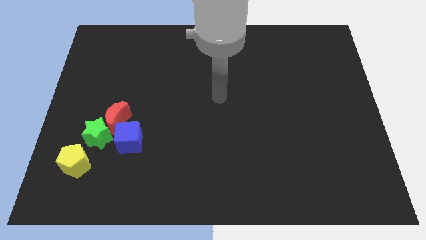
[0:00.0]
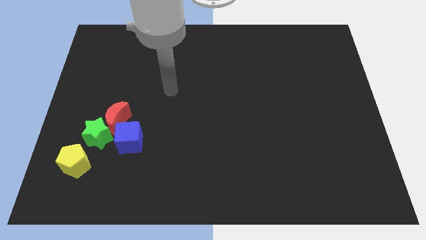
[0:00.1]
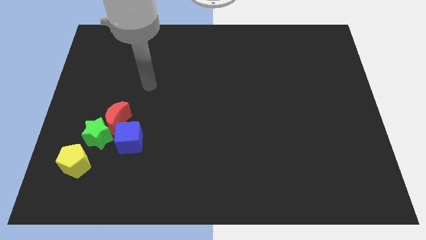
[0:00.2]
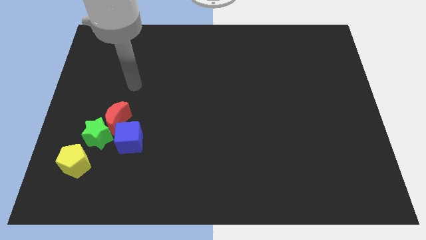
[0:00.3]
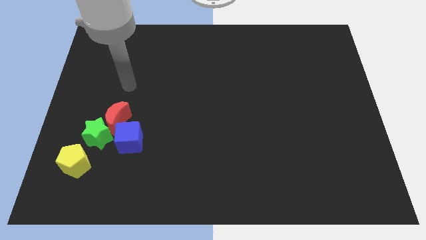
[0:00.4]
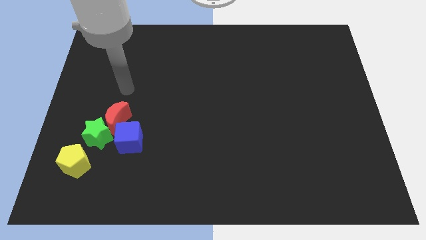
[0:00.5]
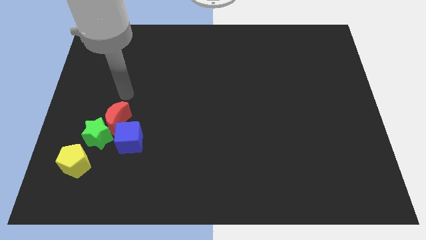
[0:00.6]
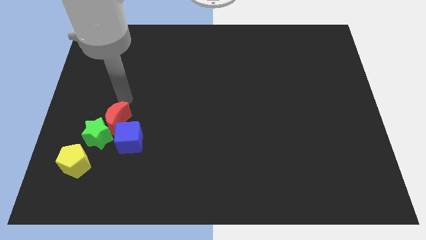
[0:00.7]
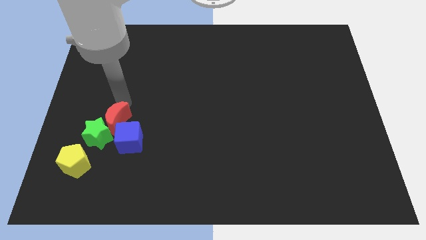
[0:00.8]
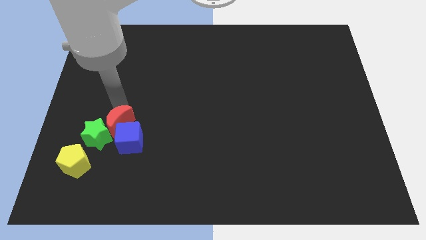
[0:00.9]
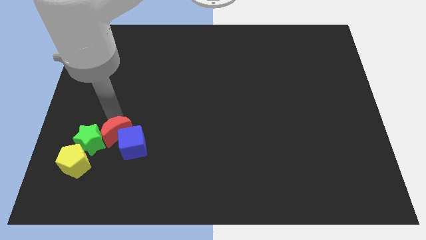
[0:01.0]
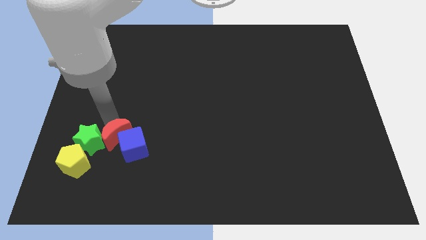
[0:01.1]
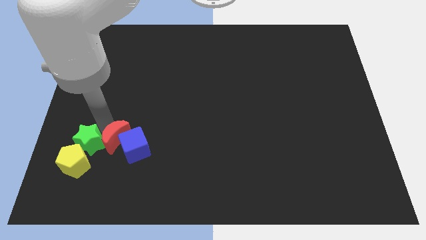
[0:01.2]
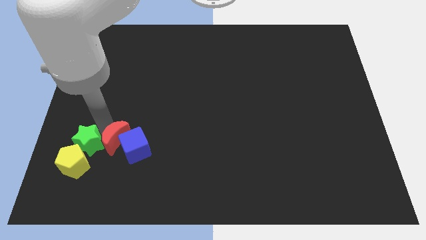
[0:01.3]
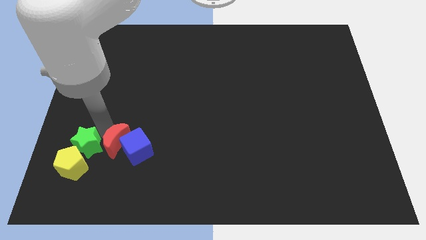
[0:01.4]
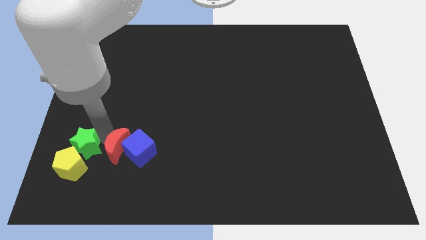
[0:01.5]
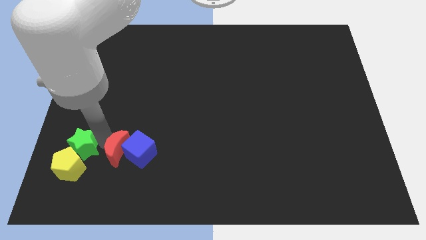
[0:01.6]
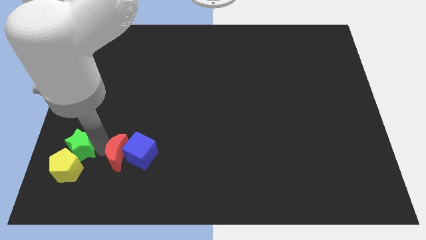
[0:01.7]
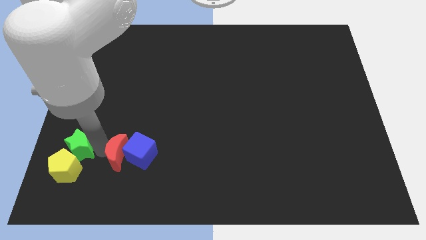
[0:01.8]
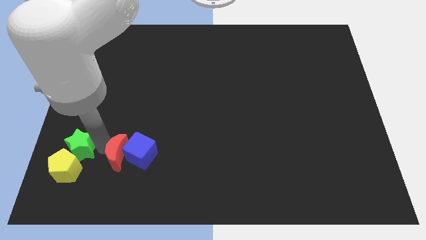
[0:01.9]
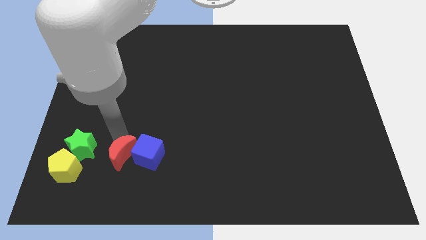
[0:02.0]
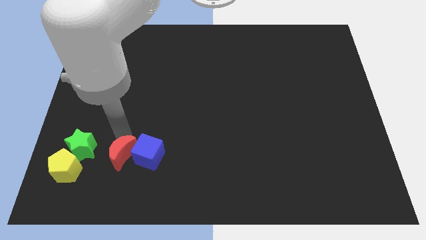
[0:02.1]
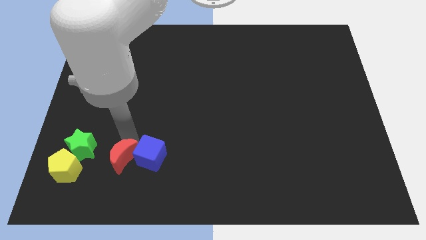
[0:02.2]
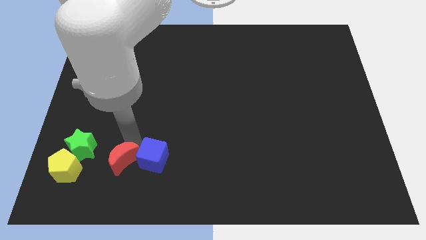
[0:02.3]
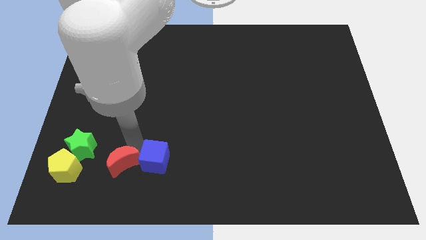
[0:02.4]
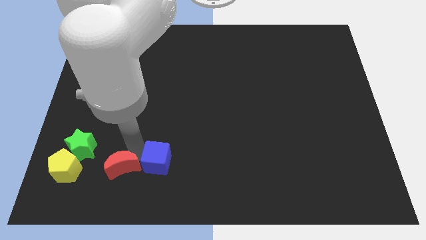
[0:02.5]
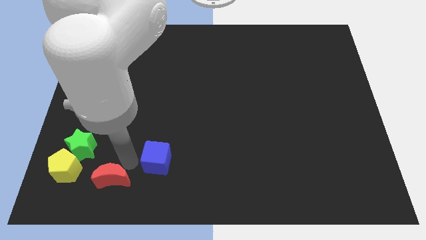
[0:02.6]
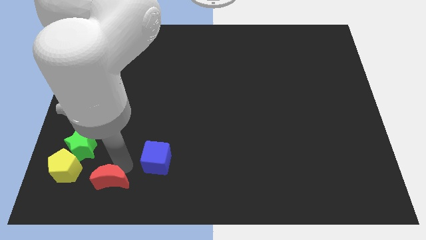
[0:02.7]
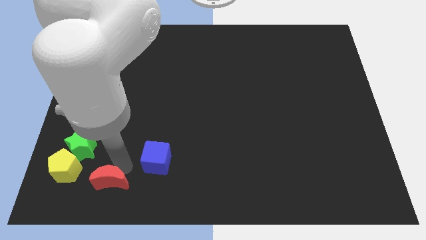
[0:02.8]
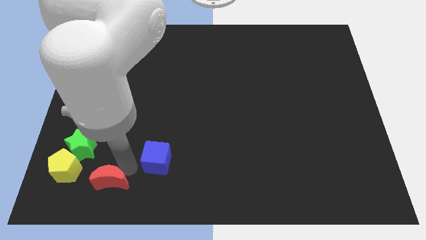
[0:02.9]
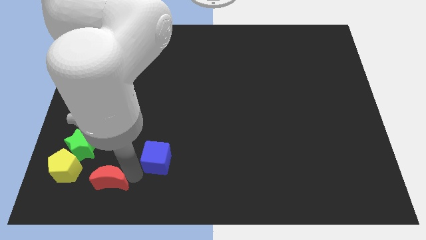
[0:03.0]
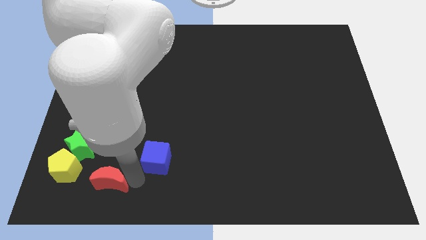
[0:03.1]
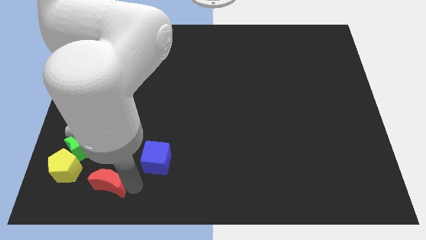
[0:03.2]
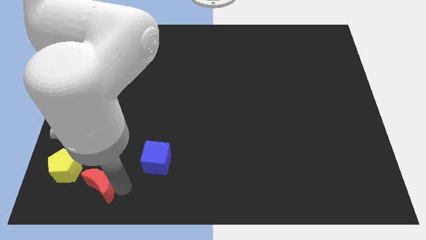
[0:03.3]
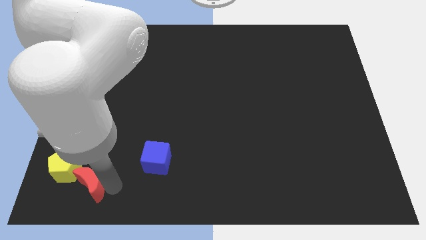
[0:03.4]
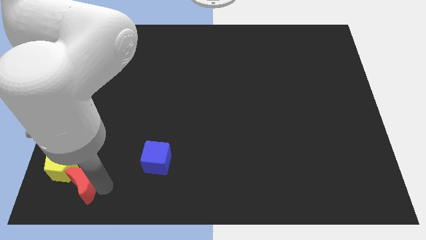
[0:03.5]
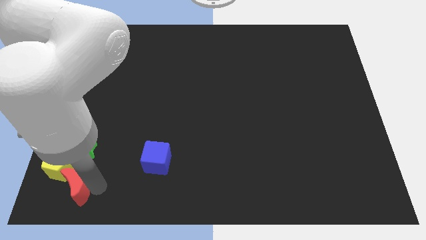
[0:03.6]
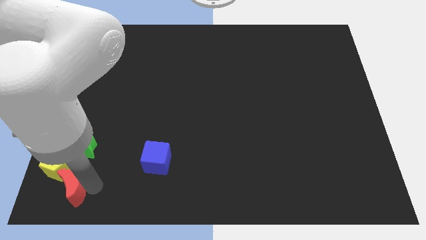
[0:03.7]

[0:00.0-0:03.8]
push the red block towards the yellow pentagon

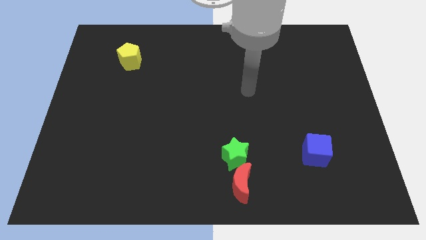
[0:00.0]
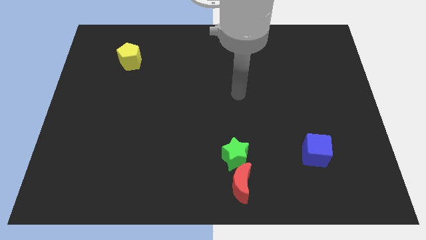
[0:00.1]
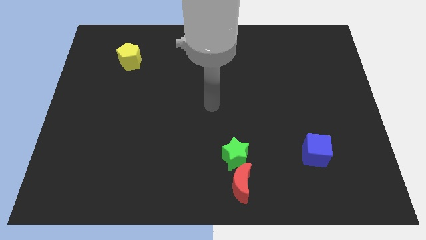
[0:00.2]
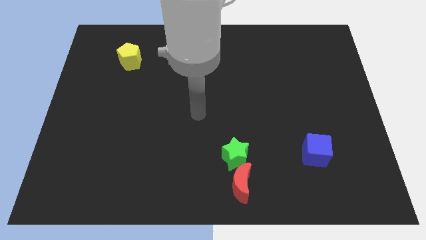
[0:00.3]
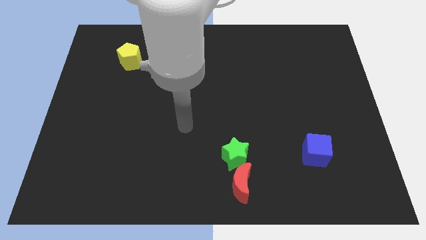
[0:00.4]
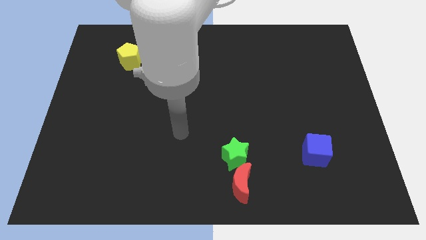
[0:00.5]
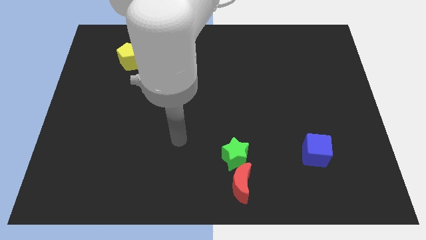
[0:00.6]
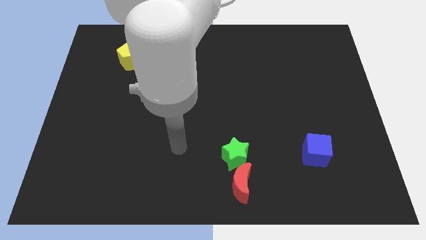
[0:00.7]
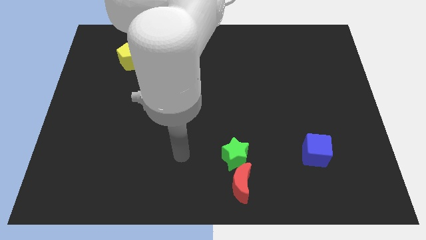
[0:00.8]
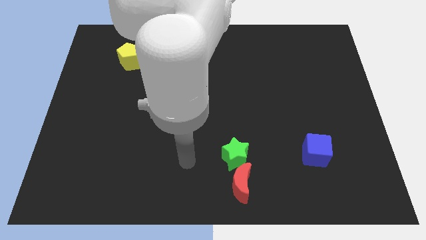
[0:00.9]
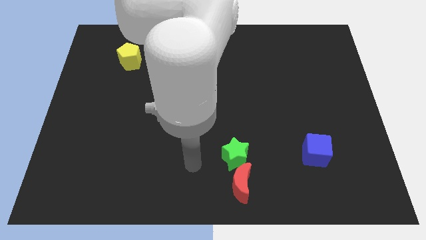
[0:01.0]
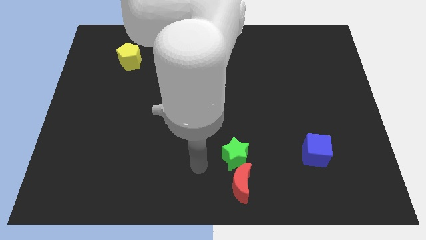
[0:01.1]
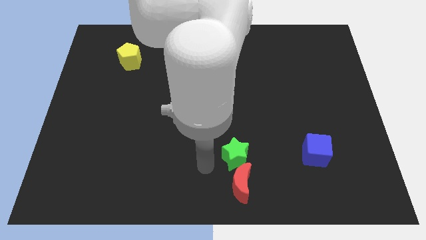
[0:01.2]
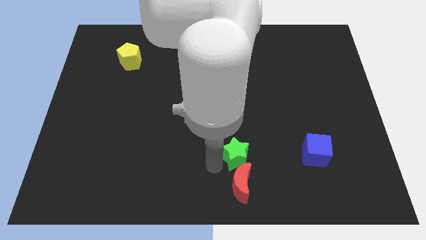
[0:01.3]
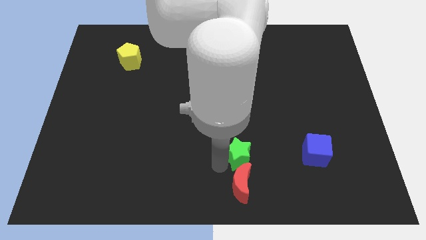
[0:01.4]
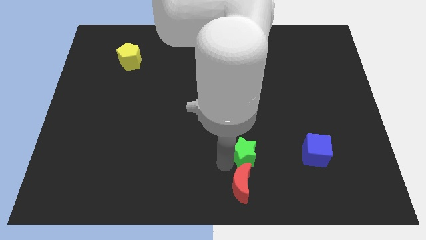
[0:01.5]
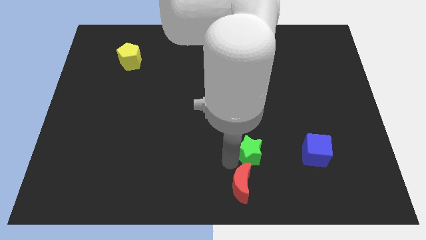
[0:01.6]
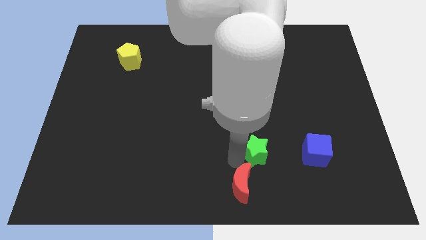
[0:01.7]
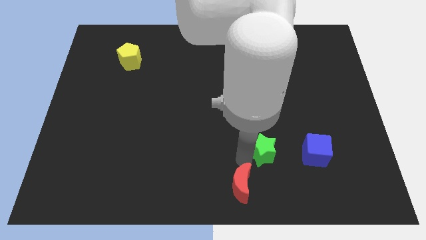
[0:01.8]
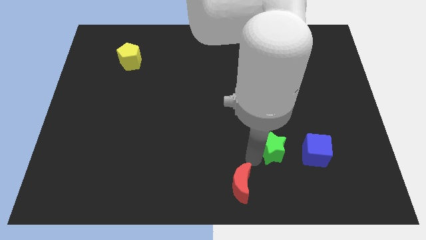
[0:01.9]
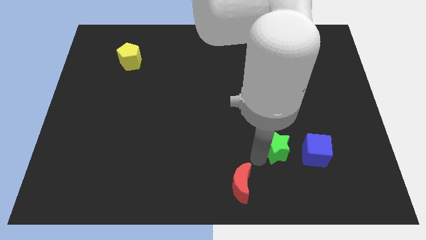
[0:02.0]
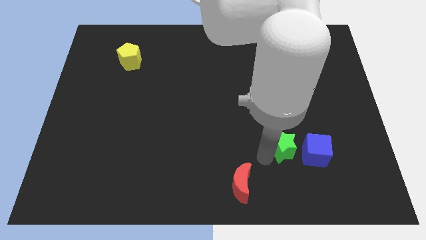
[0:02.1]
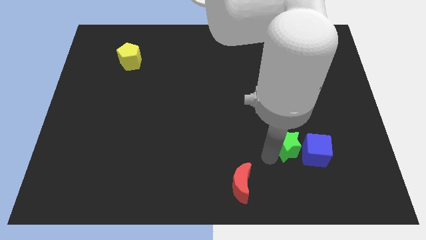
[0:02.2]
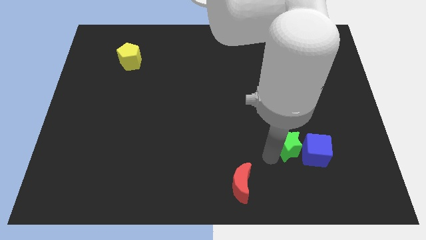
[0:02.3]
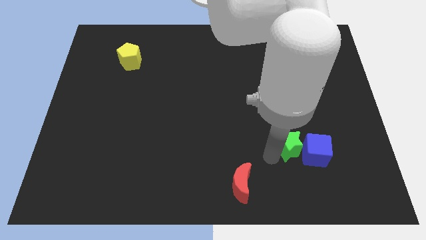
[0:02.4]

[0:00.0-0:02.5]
push the green star towards the cube

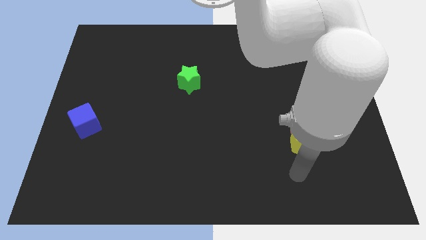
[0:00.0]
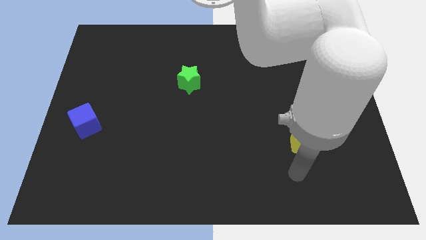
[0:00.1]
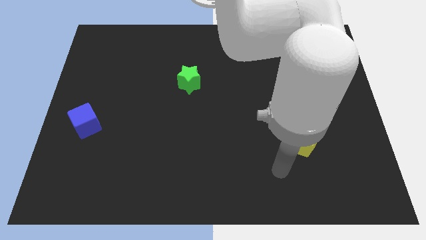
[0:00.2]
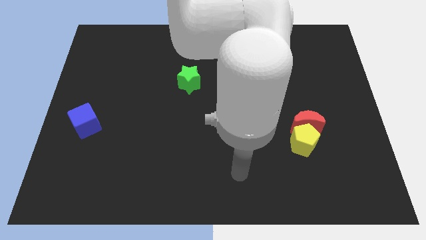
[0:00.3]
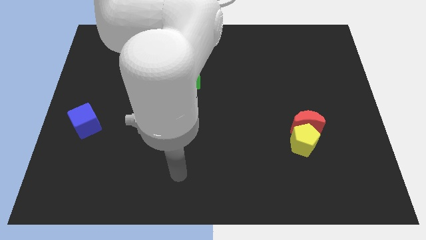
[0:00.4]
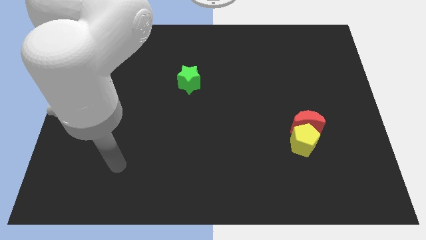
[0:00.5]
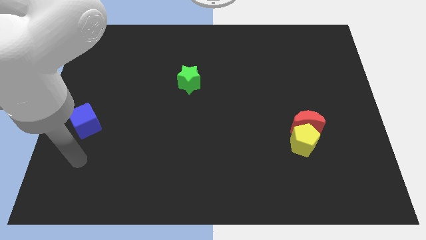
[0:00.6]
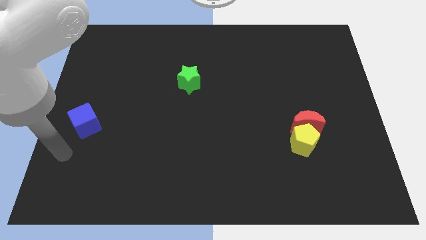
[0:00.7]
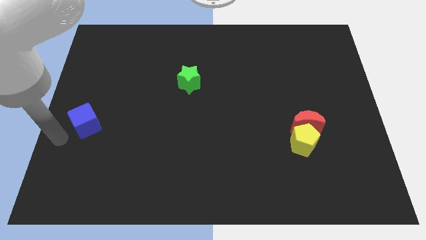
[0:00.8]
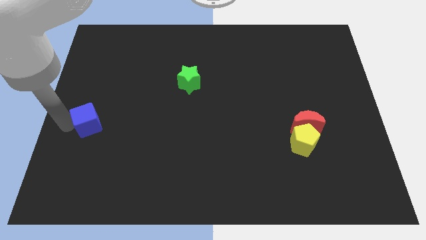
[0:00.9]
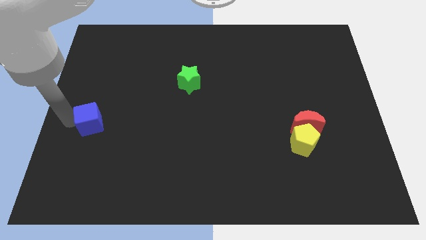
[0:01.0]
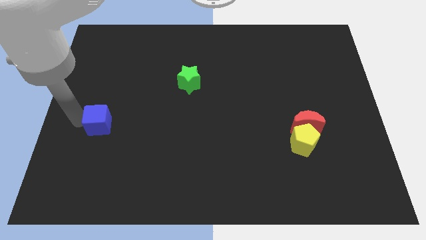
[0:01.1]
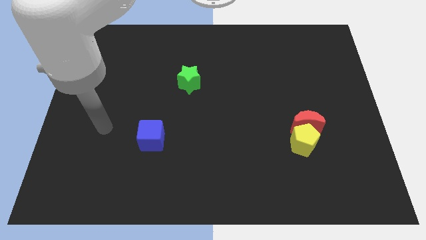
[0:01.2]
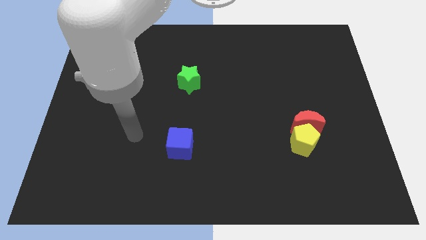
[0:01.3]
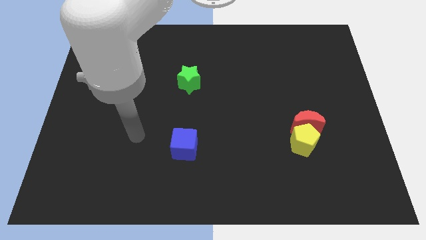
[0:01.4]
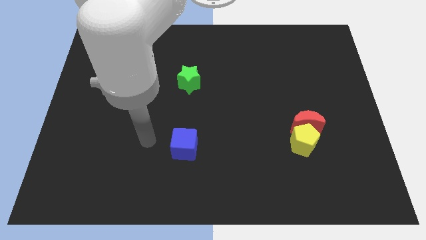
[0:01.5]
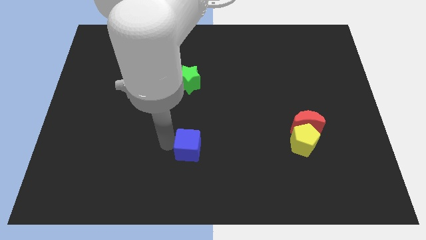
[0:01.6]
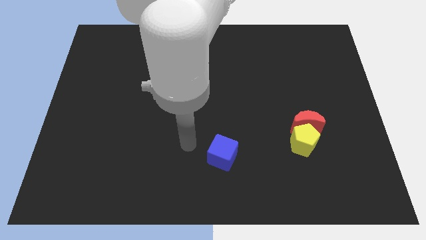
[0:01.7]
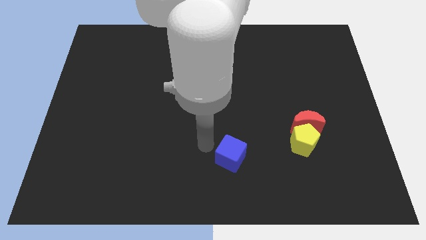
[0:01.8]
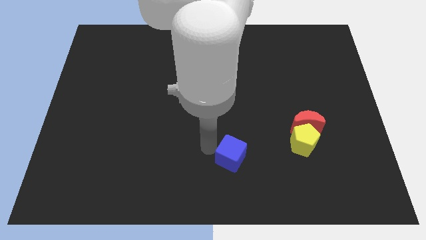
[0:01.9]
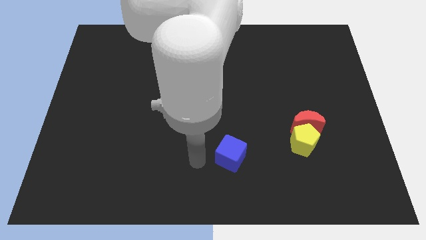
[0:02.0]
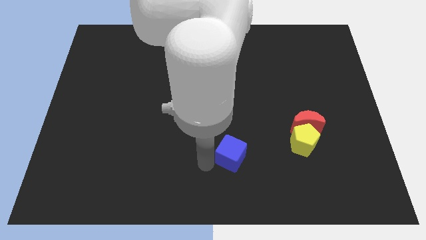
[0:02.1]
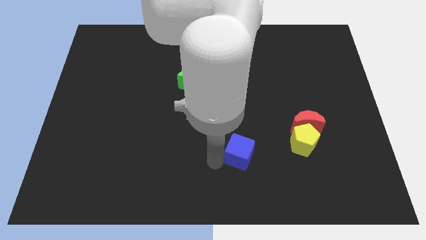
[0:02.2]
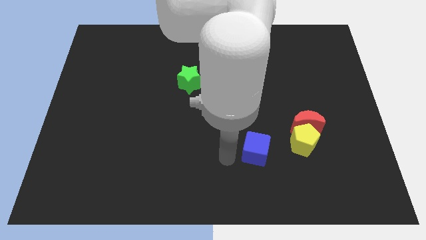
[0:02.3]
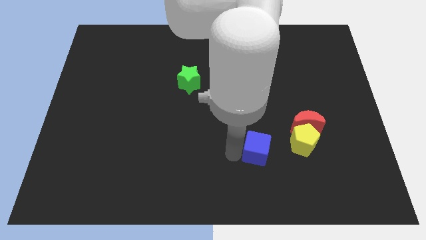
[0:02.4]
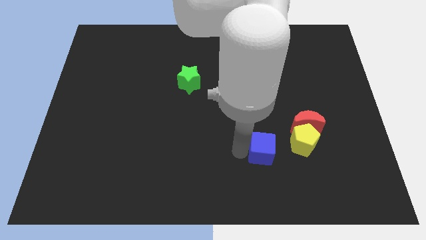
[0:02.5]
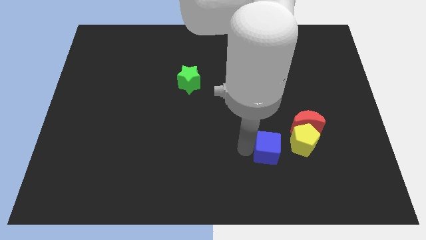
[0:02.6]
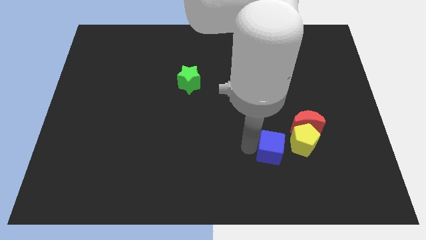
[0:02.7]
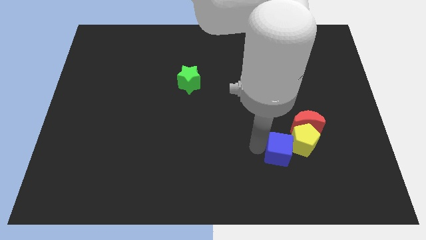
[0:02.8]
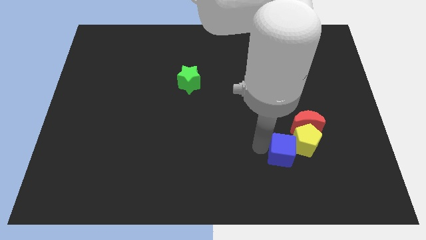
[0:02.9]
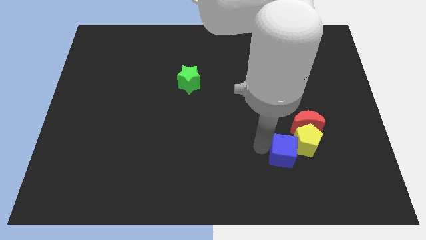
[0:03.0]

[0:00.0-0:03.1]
put the blue block close to the pentagon
